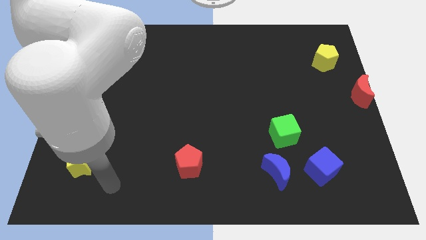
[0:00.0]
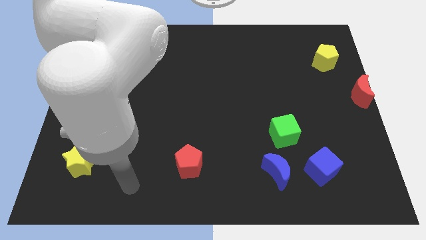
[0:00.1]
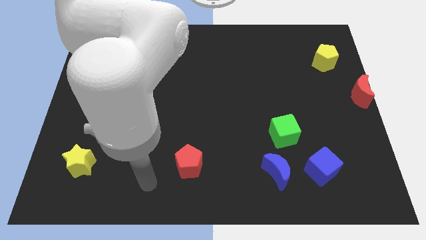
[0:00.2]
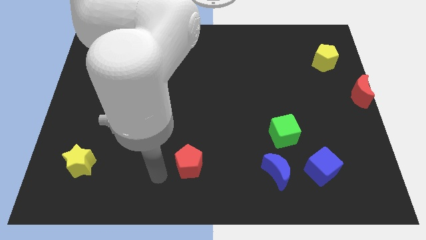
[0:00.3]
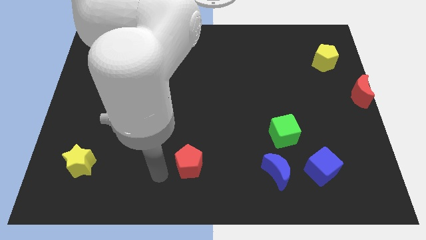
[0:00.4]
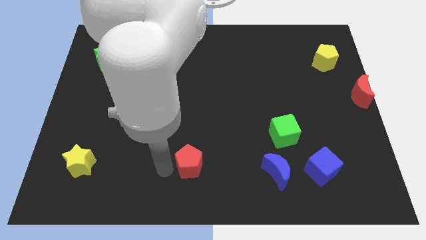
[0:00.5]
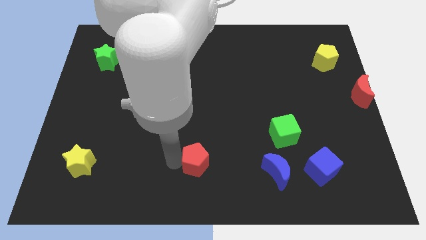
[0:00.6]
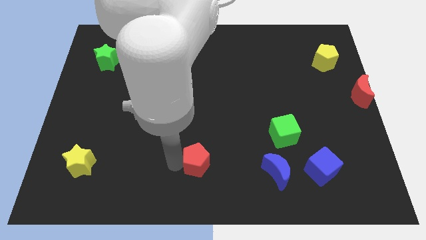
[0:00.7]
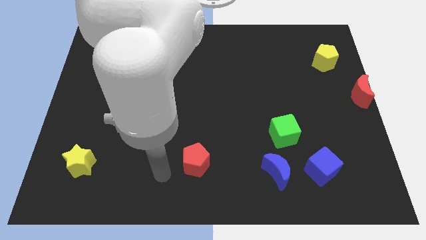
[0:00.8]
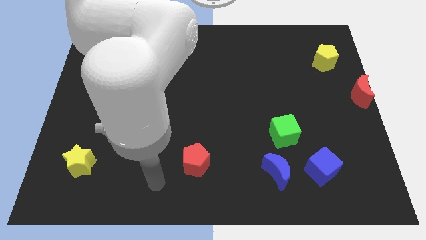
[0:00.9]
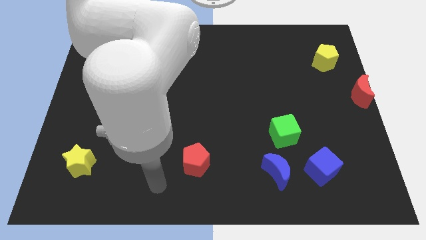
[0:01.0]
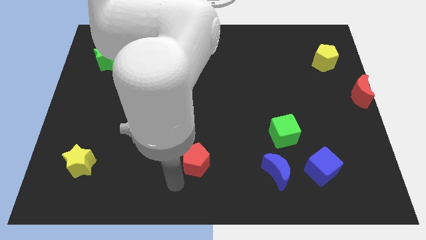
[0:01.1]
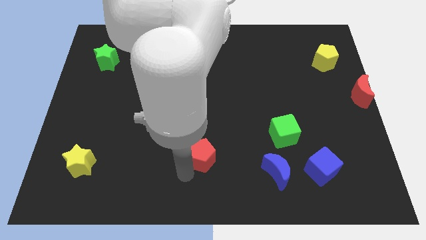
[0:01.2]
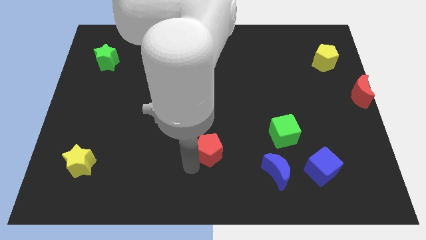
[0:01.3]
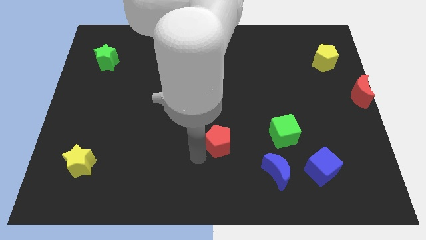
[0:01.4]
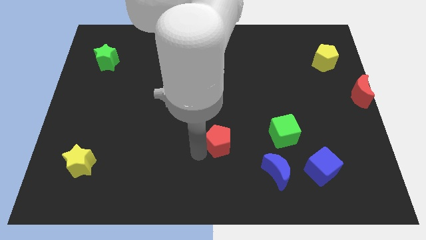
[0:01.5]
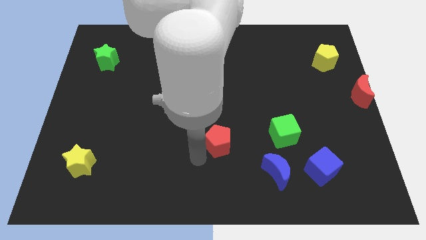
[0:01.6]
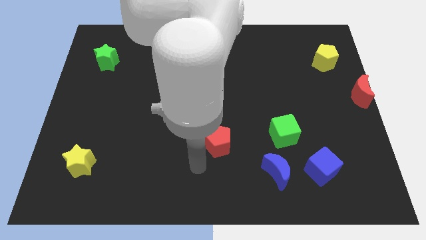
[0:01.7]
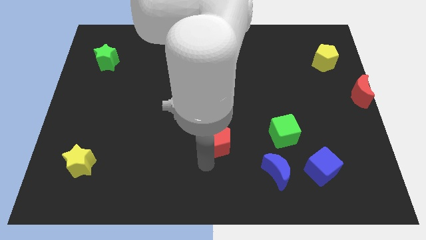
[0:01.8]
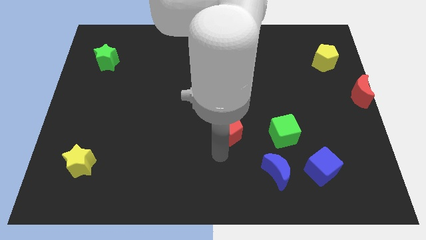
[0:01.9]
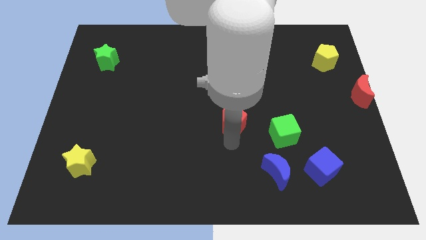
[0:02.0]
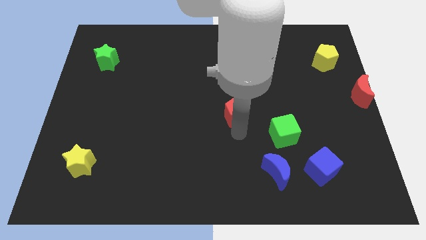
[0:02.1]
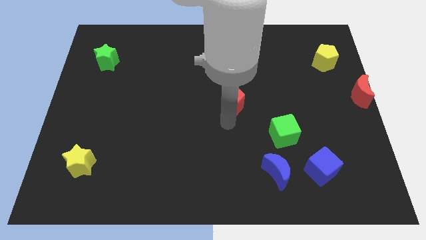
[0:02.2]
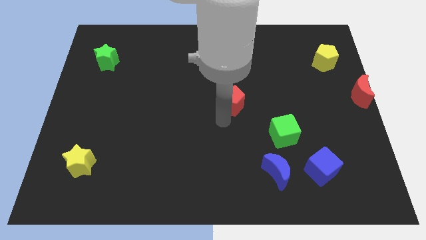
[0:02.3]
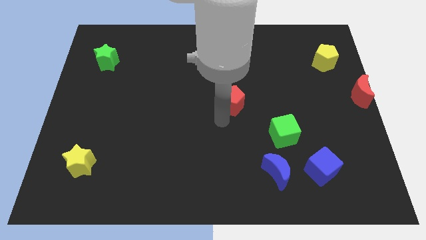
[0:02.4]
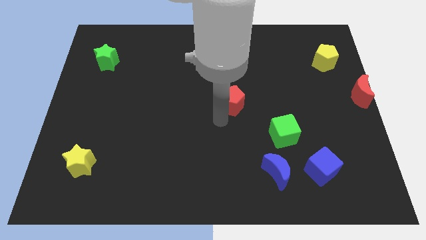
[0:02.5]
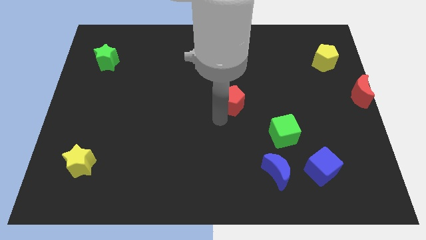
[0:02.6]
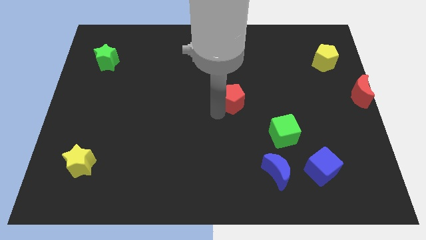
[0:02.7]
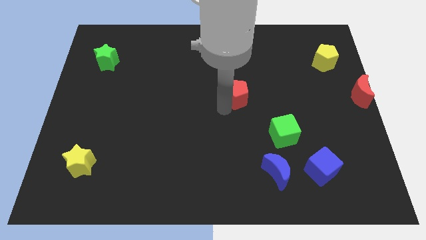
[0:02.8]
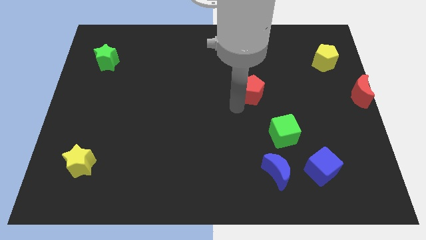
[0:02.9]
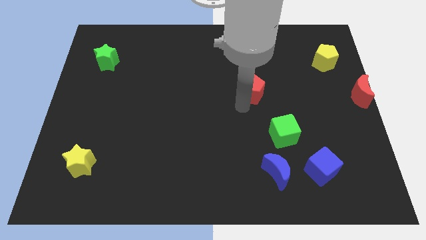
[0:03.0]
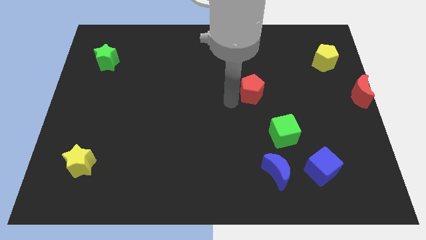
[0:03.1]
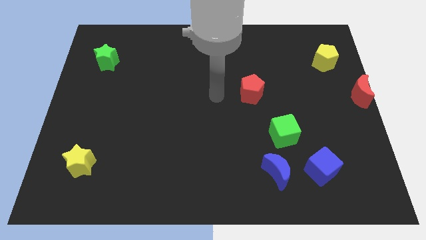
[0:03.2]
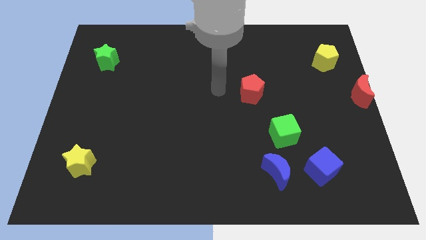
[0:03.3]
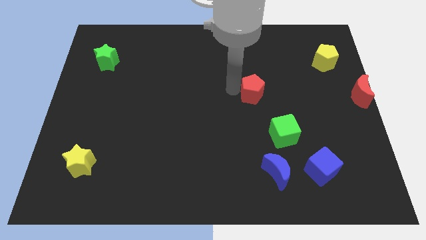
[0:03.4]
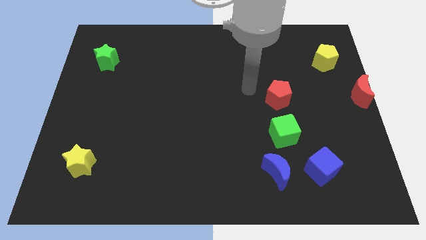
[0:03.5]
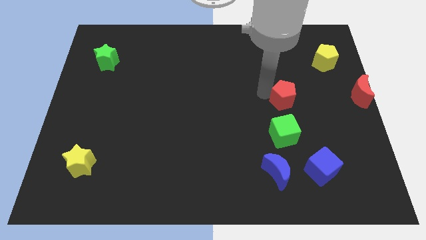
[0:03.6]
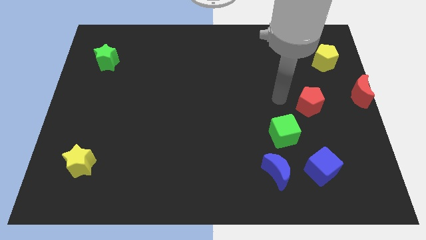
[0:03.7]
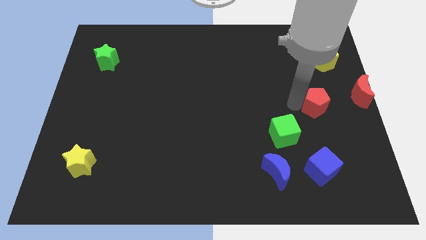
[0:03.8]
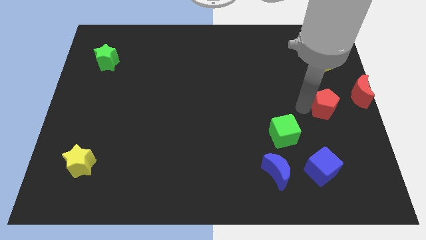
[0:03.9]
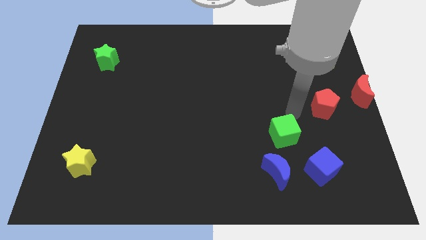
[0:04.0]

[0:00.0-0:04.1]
drag the red pentagon vertically above the blue cube

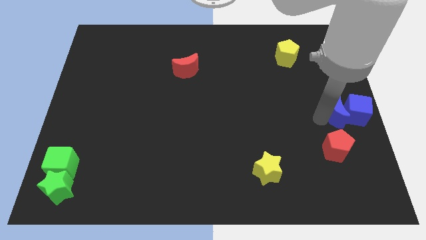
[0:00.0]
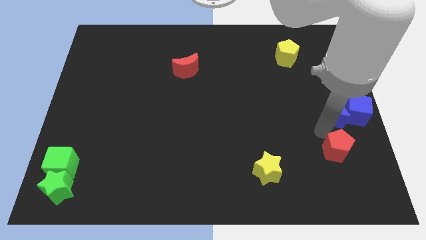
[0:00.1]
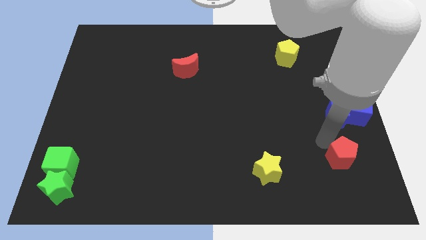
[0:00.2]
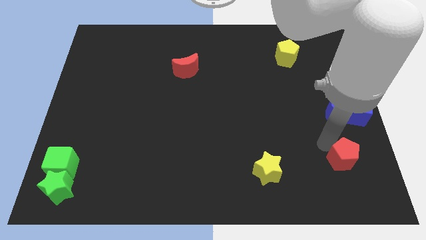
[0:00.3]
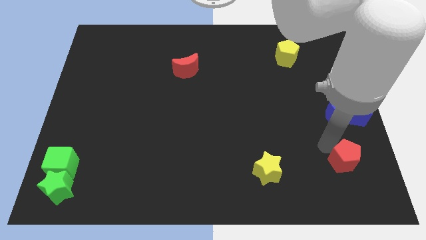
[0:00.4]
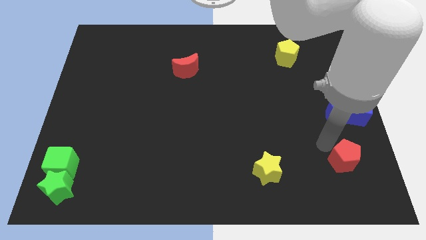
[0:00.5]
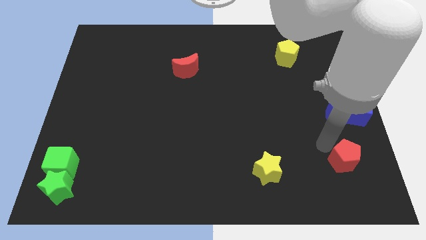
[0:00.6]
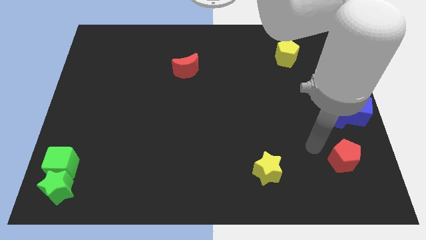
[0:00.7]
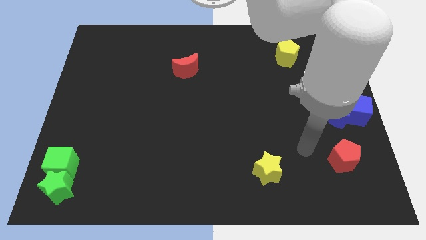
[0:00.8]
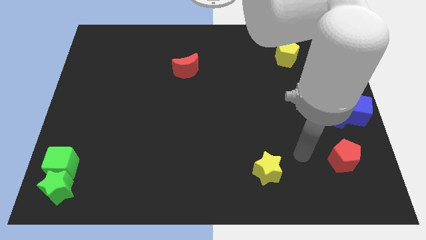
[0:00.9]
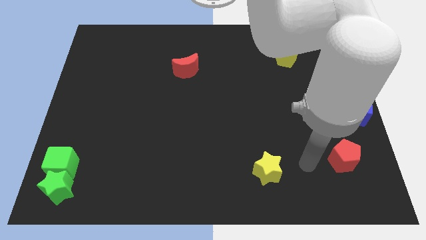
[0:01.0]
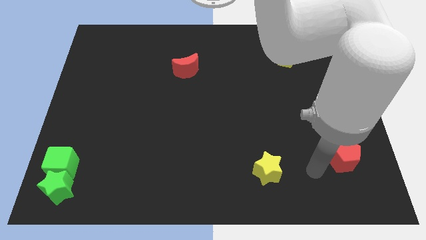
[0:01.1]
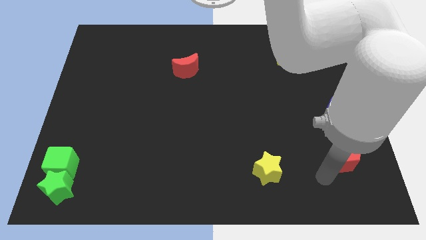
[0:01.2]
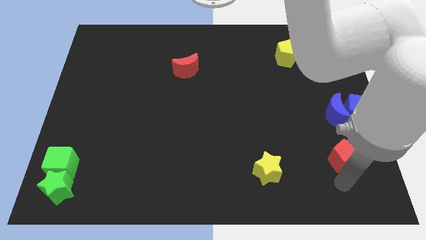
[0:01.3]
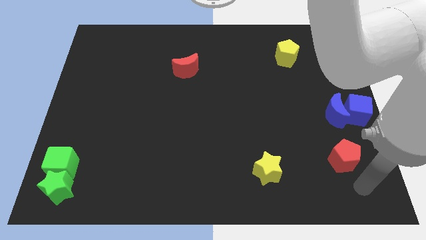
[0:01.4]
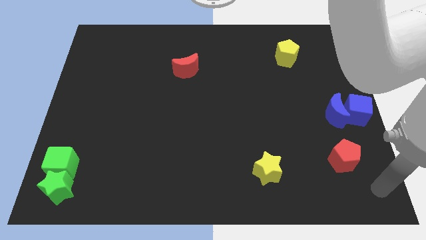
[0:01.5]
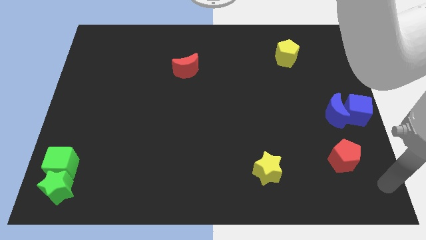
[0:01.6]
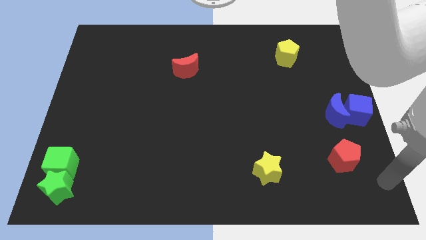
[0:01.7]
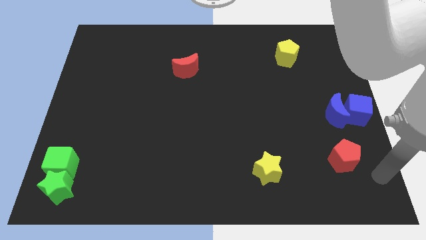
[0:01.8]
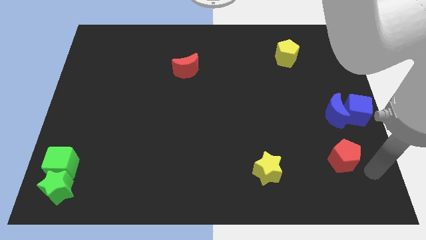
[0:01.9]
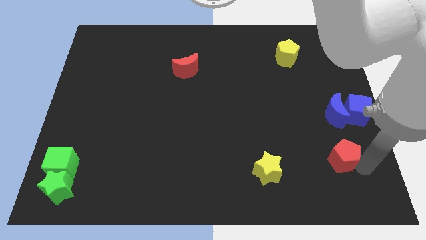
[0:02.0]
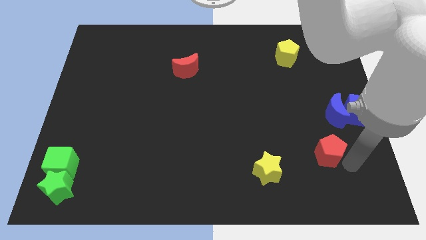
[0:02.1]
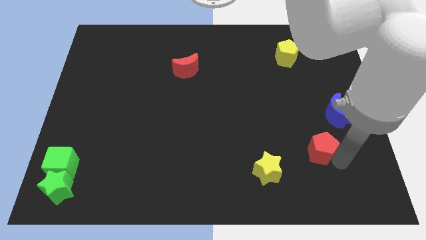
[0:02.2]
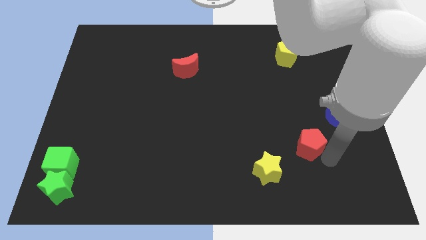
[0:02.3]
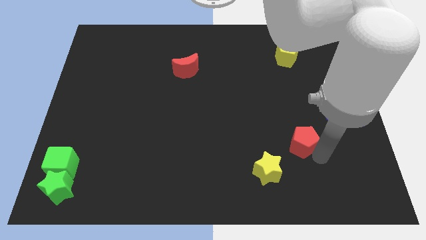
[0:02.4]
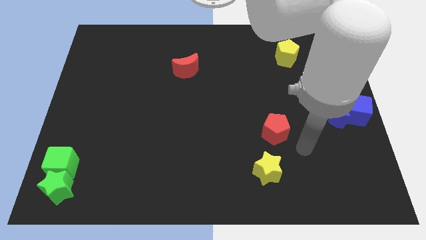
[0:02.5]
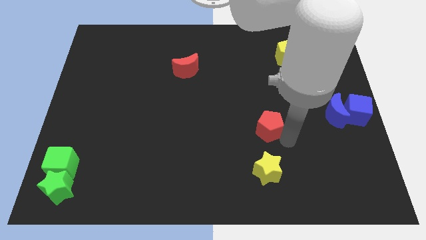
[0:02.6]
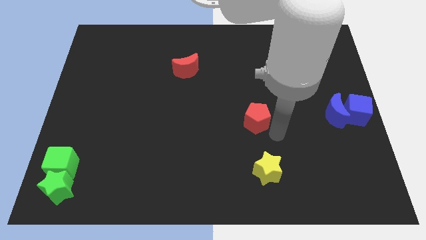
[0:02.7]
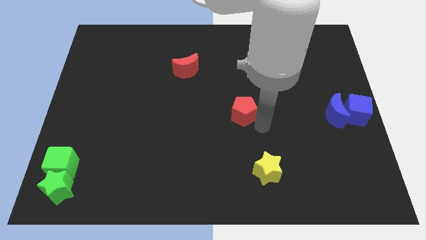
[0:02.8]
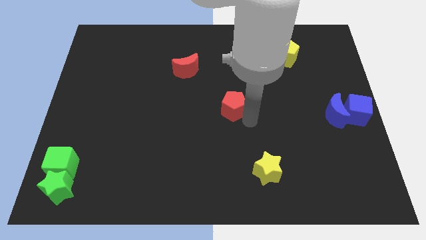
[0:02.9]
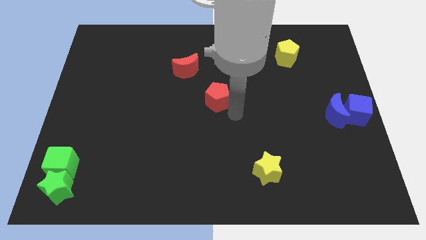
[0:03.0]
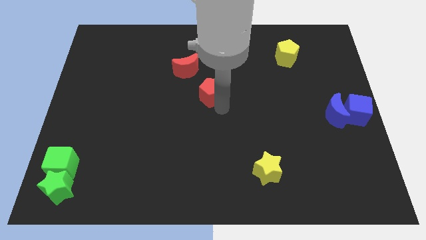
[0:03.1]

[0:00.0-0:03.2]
put the red pentagon at the center of the board

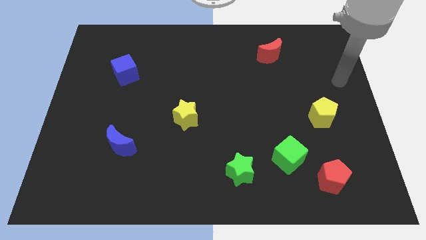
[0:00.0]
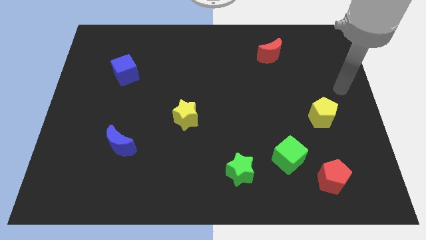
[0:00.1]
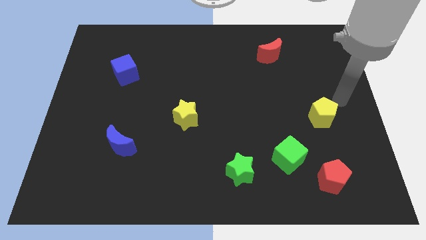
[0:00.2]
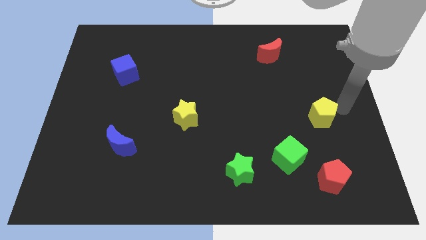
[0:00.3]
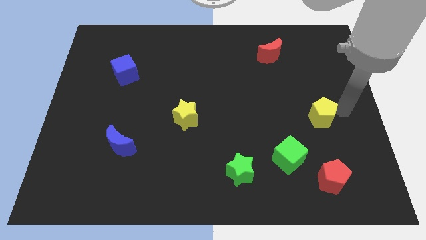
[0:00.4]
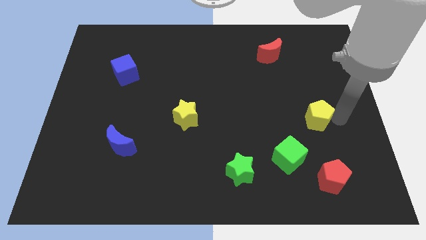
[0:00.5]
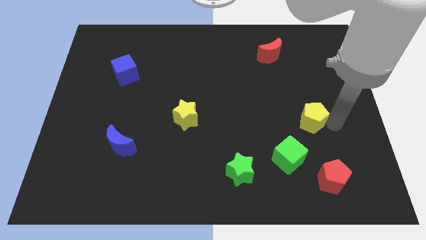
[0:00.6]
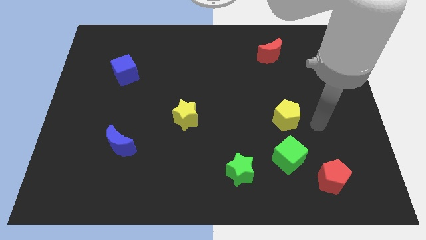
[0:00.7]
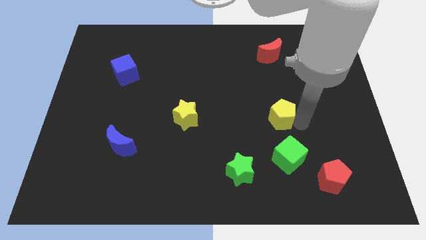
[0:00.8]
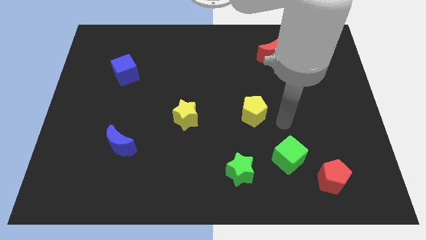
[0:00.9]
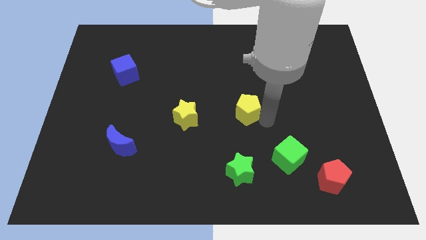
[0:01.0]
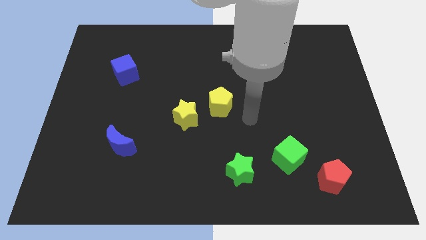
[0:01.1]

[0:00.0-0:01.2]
push the yellow pentagon to the center of the board

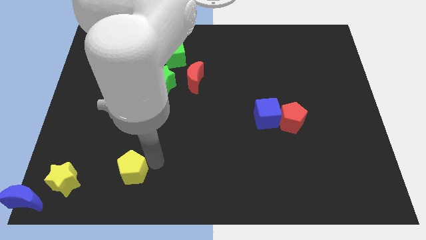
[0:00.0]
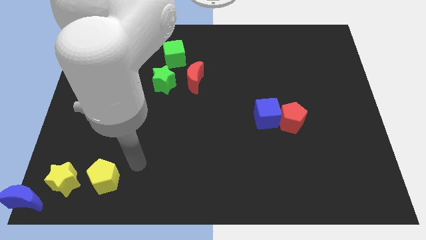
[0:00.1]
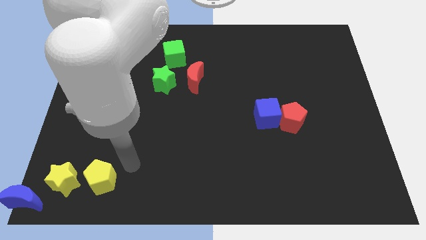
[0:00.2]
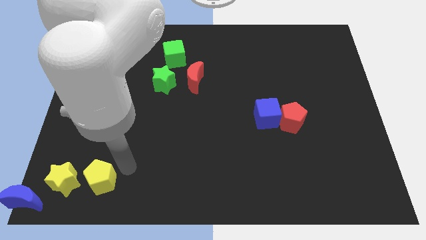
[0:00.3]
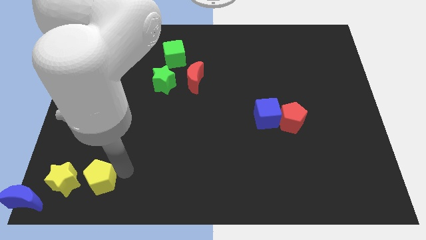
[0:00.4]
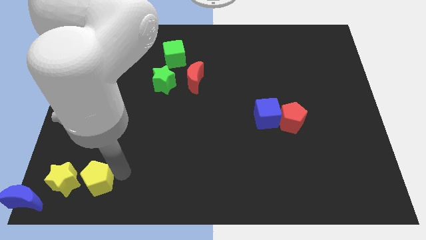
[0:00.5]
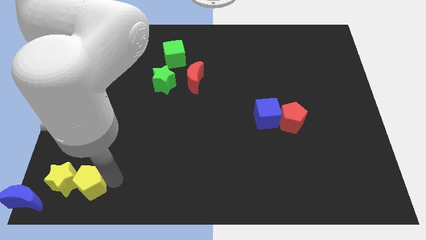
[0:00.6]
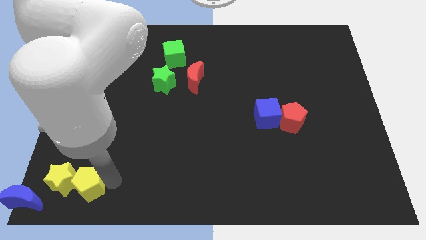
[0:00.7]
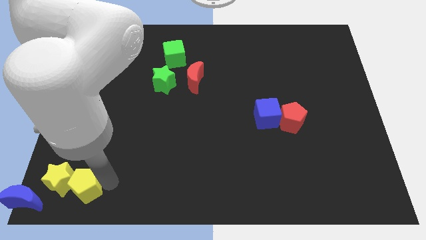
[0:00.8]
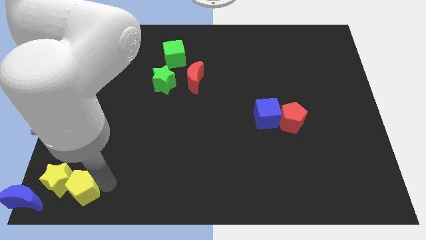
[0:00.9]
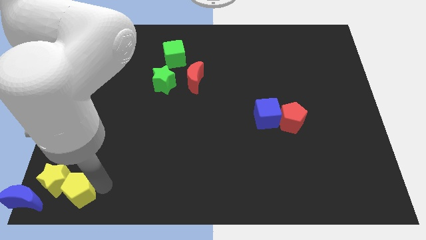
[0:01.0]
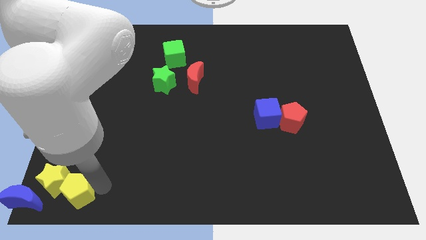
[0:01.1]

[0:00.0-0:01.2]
move yellow blocks above blue moon
